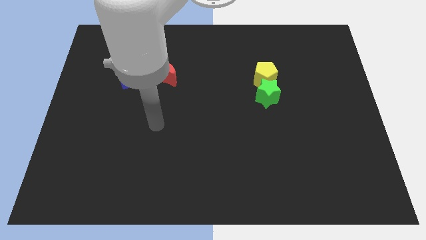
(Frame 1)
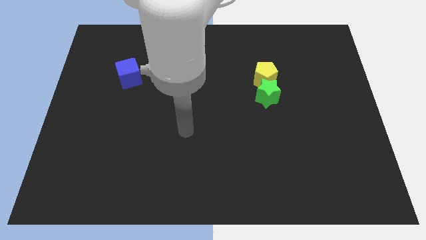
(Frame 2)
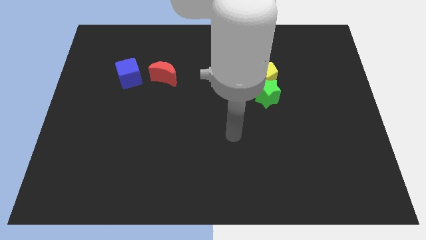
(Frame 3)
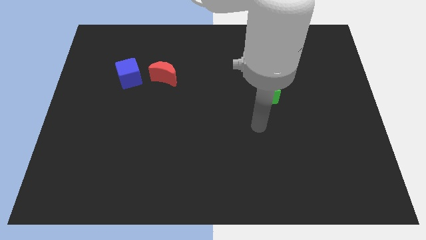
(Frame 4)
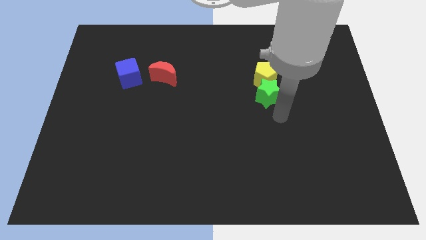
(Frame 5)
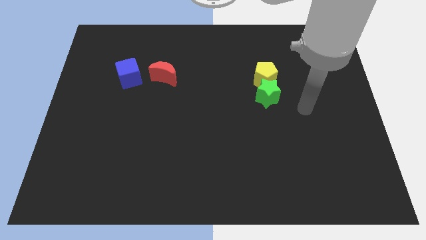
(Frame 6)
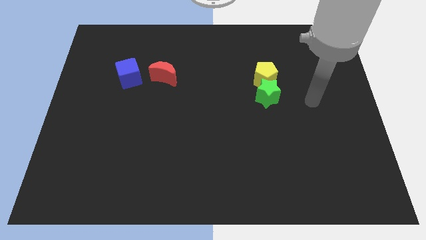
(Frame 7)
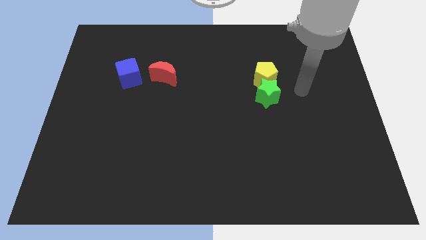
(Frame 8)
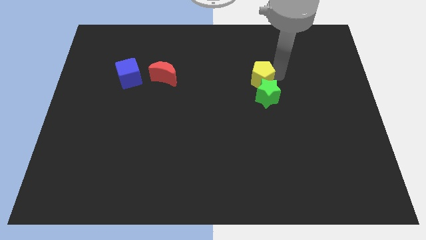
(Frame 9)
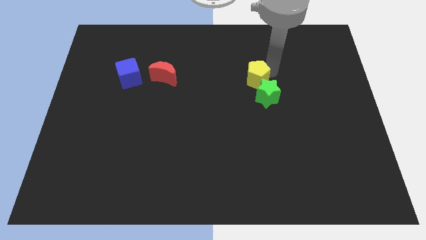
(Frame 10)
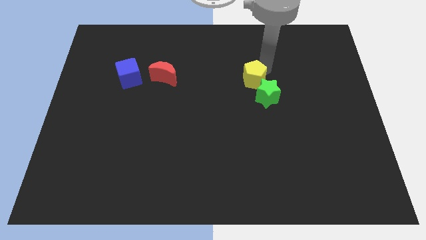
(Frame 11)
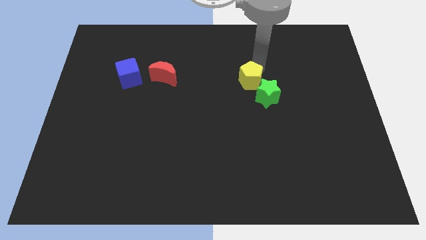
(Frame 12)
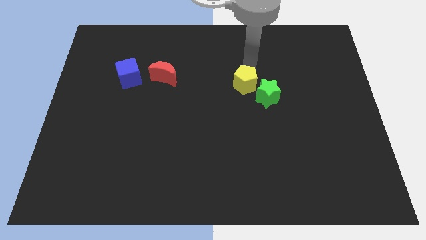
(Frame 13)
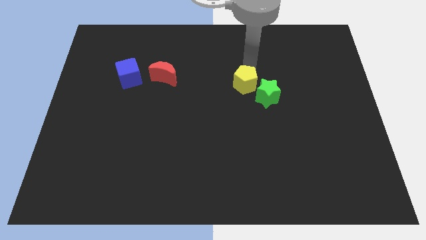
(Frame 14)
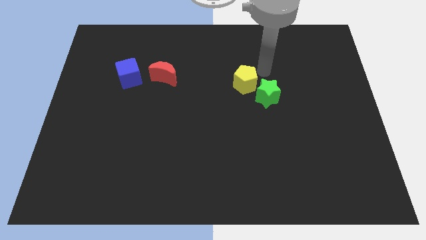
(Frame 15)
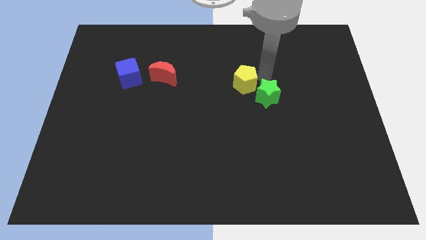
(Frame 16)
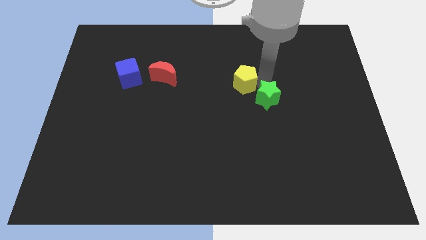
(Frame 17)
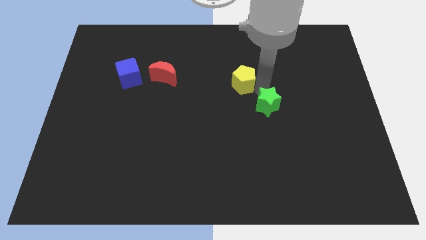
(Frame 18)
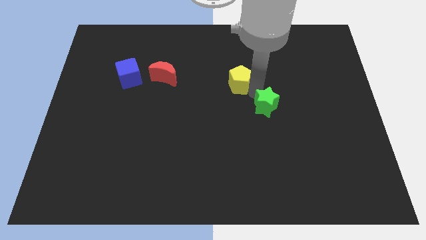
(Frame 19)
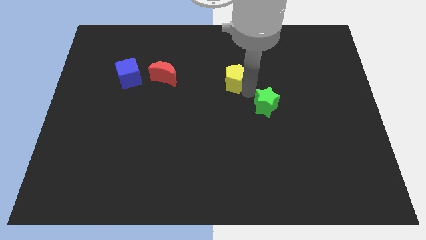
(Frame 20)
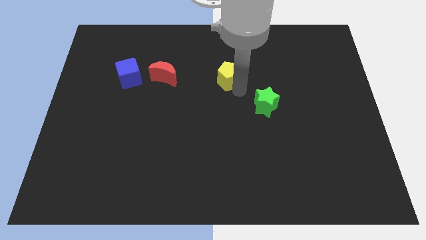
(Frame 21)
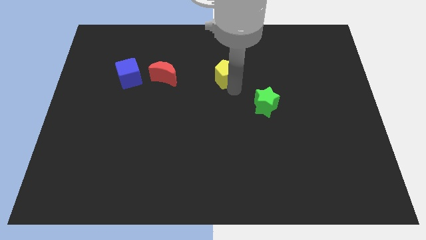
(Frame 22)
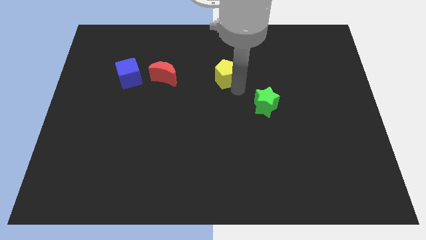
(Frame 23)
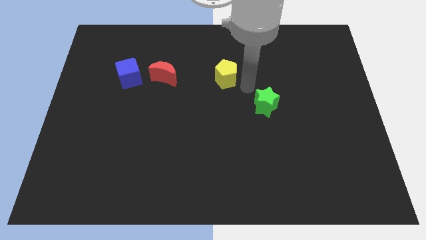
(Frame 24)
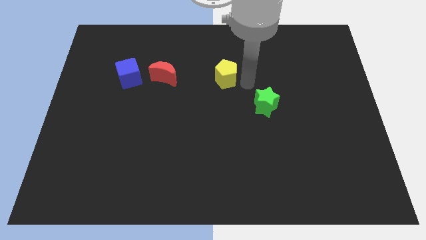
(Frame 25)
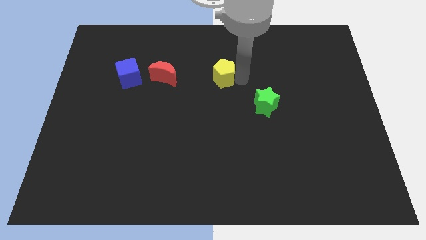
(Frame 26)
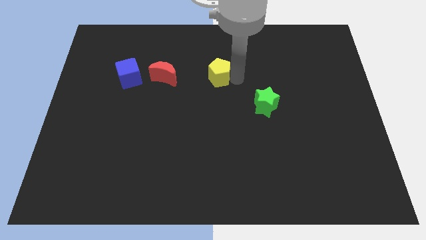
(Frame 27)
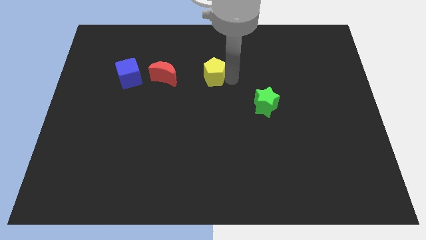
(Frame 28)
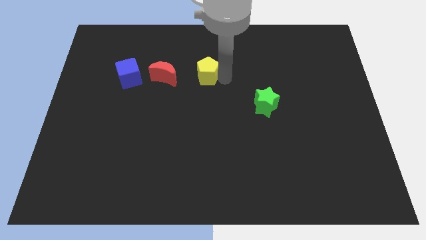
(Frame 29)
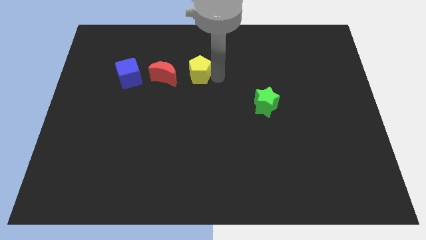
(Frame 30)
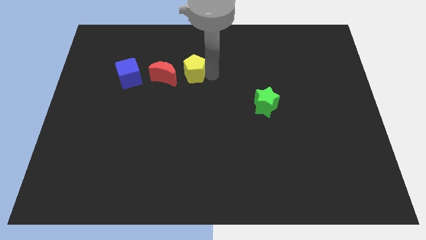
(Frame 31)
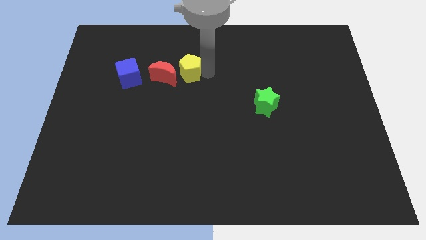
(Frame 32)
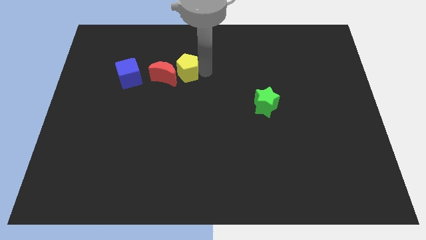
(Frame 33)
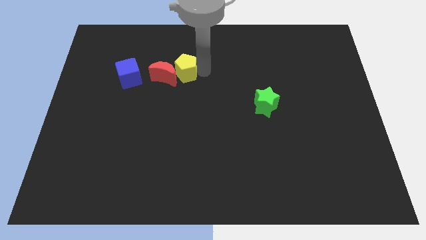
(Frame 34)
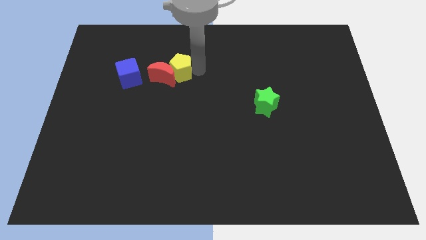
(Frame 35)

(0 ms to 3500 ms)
move the yellow pentagon towards the moon

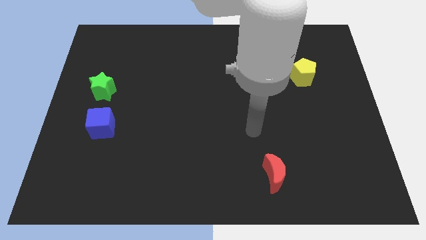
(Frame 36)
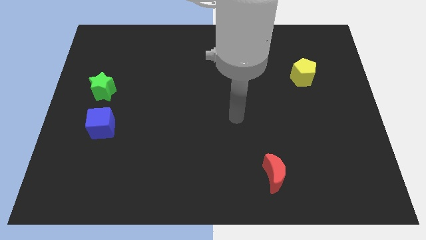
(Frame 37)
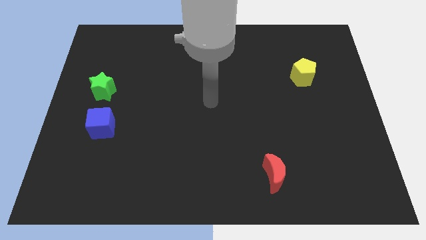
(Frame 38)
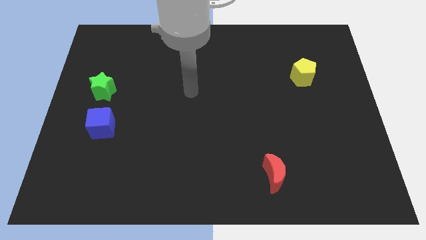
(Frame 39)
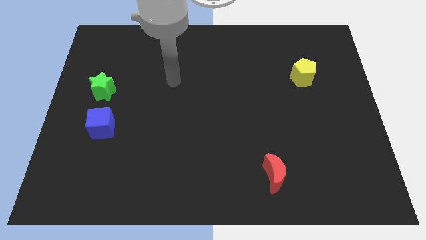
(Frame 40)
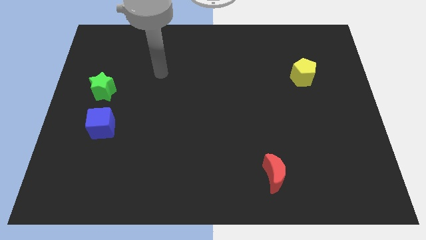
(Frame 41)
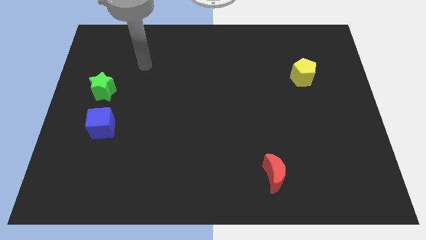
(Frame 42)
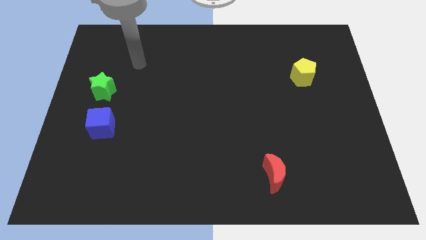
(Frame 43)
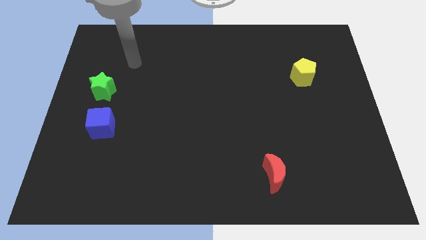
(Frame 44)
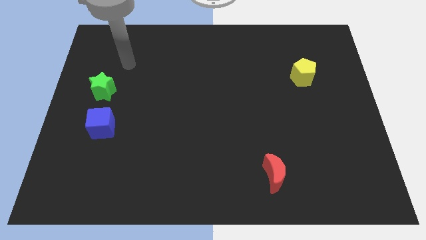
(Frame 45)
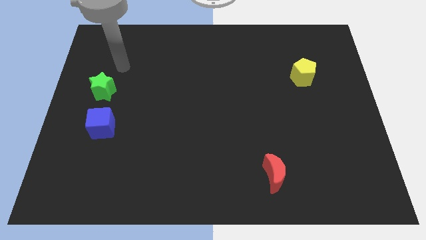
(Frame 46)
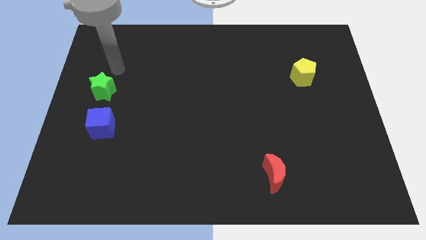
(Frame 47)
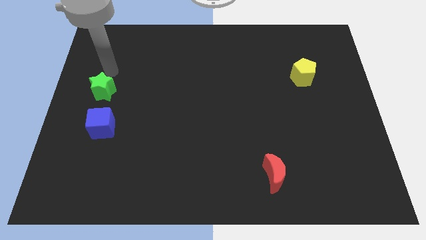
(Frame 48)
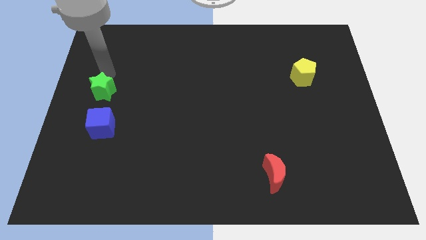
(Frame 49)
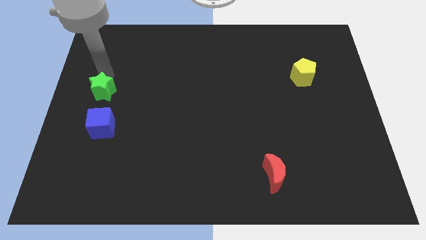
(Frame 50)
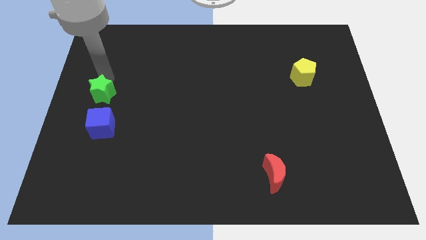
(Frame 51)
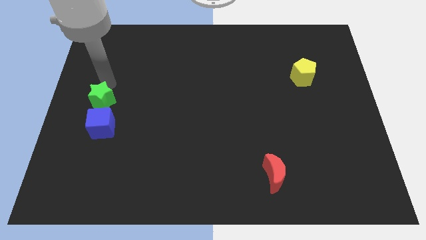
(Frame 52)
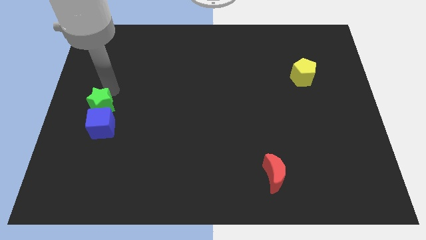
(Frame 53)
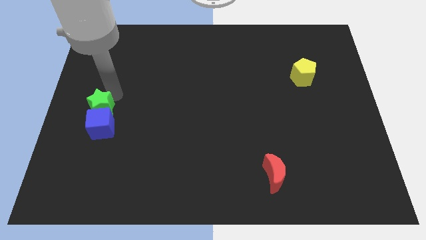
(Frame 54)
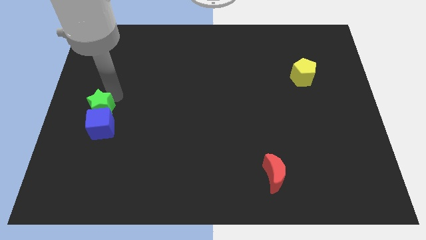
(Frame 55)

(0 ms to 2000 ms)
slide the green block towards the blue cube

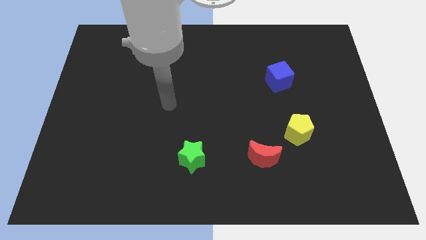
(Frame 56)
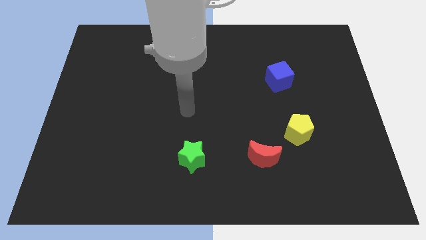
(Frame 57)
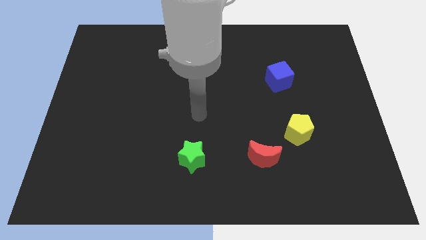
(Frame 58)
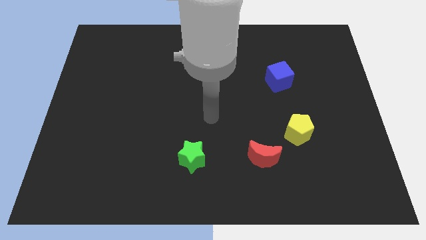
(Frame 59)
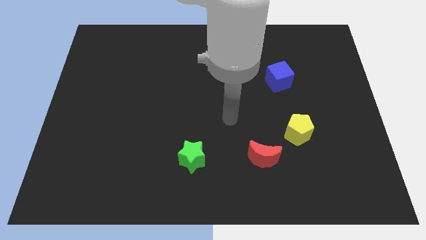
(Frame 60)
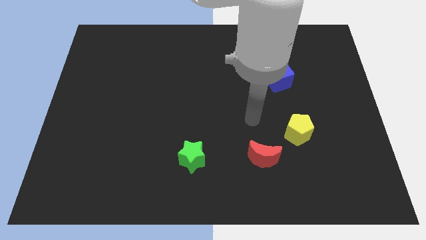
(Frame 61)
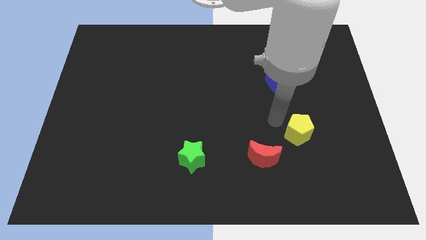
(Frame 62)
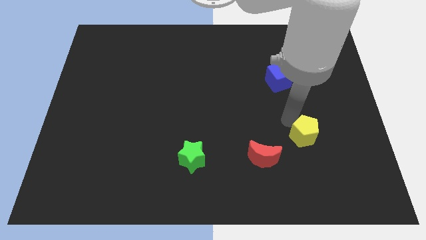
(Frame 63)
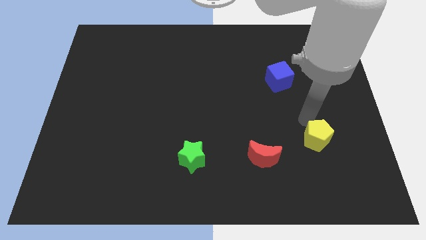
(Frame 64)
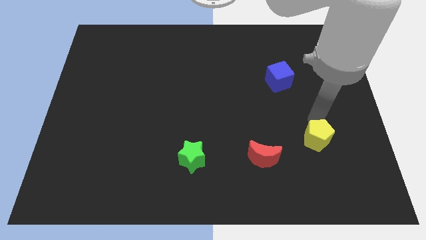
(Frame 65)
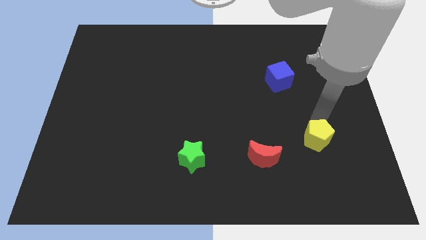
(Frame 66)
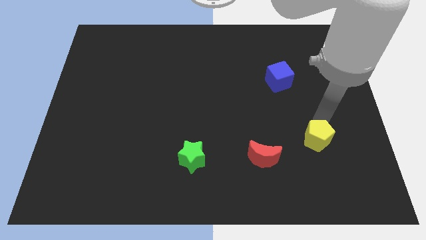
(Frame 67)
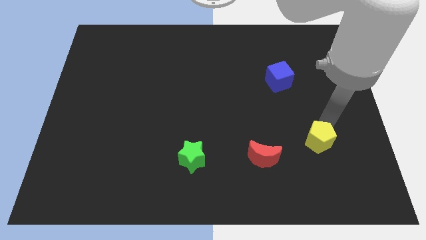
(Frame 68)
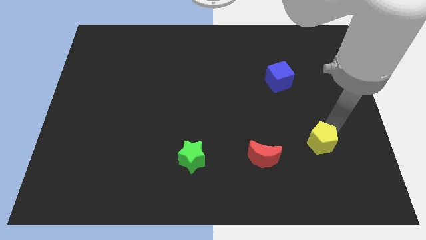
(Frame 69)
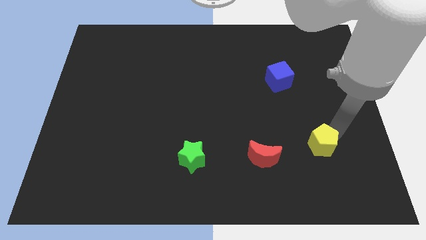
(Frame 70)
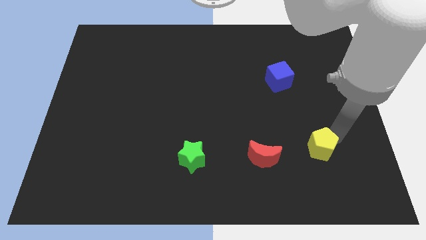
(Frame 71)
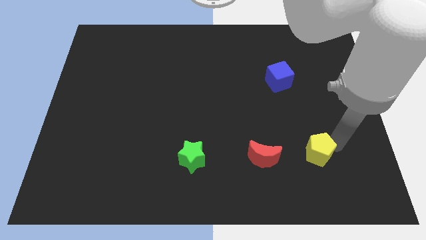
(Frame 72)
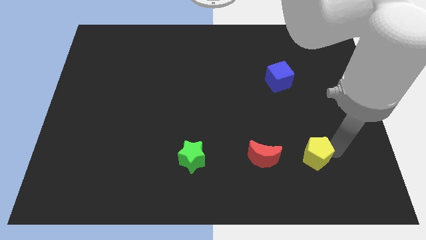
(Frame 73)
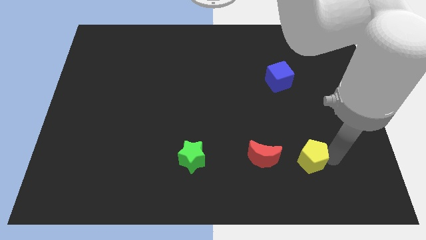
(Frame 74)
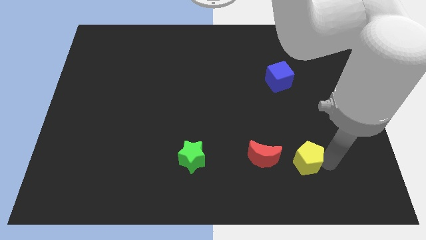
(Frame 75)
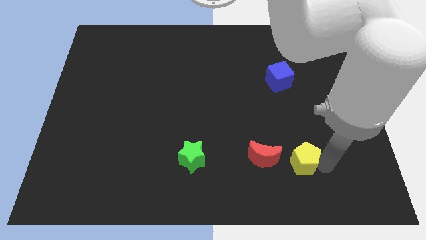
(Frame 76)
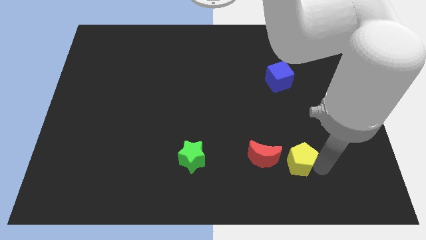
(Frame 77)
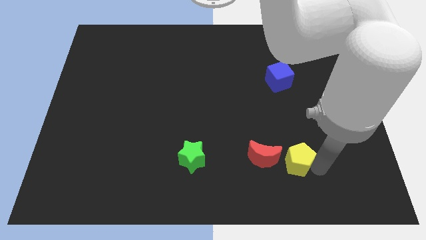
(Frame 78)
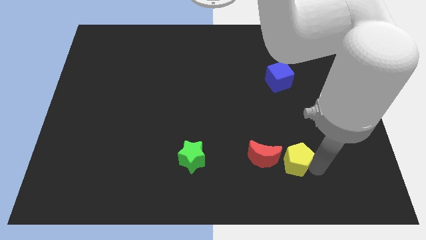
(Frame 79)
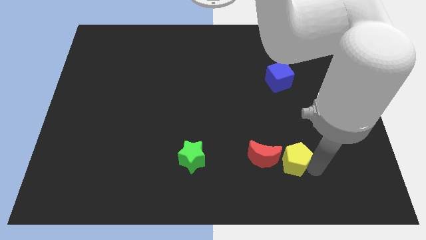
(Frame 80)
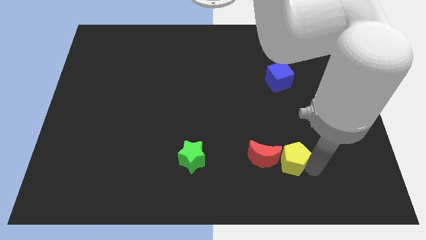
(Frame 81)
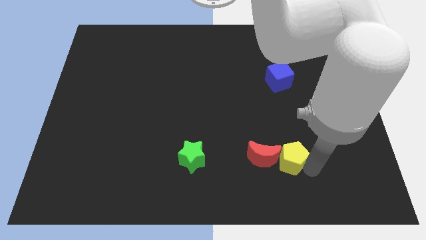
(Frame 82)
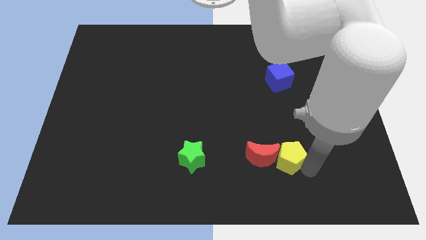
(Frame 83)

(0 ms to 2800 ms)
put the yellow block towards the moon

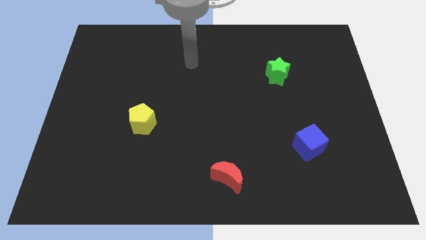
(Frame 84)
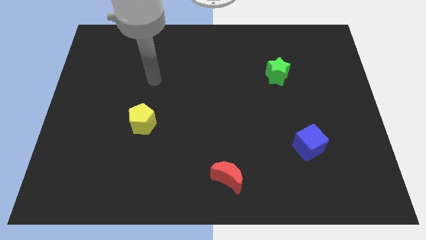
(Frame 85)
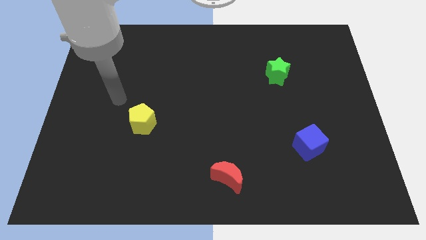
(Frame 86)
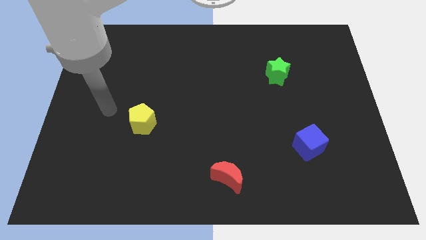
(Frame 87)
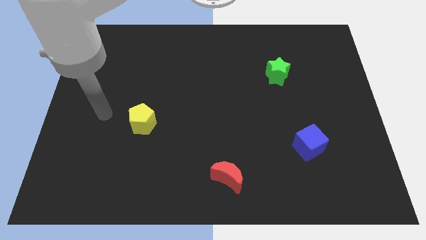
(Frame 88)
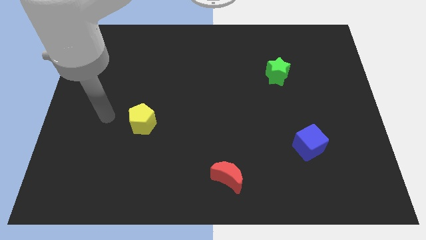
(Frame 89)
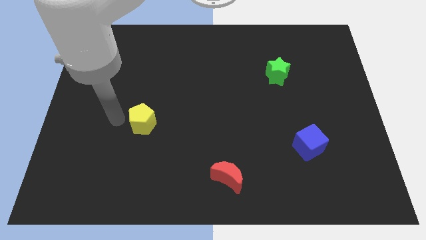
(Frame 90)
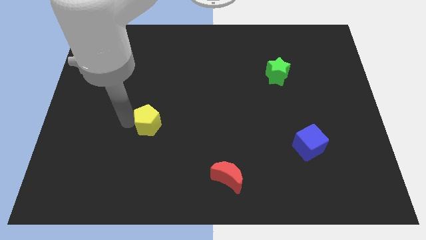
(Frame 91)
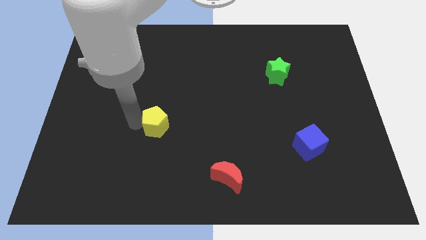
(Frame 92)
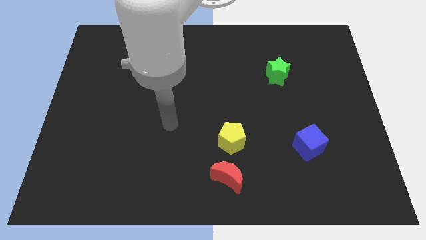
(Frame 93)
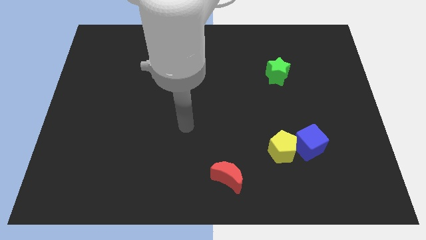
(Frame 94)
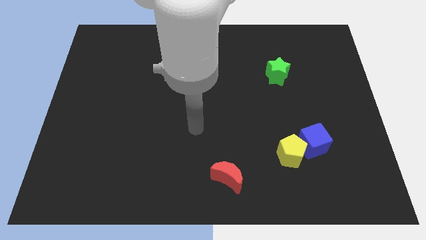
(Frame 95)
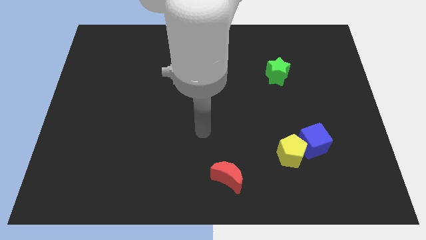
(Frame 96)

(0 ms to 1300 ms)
push the yellow pentagon to the blue block
